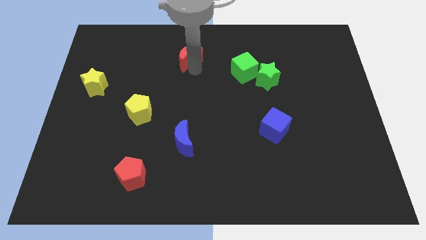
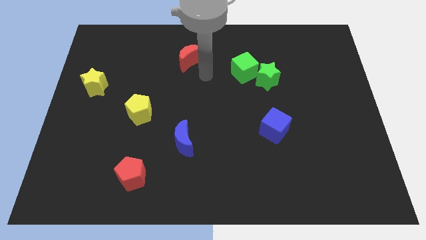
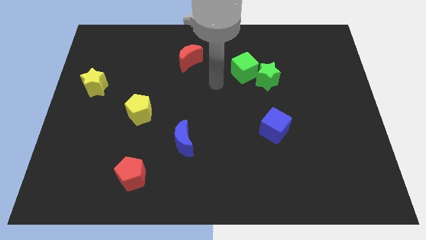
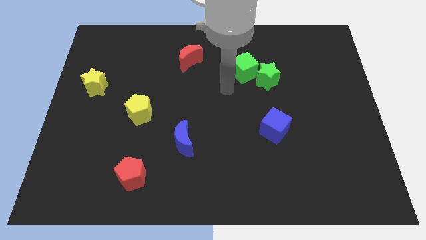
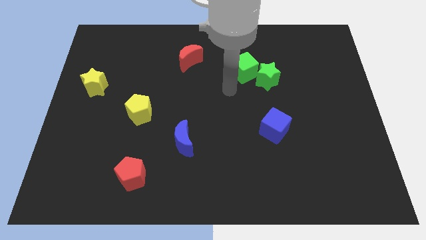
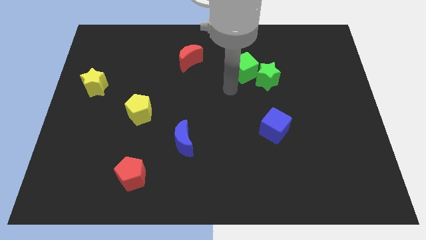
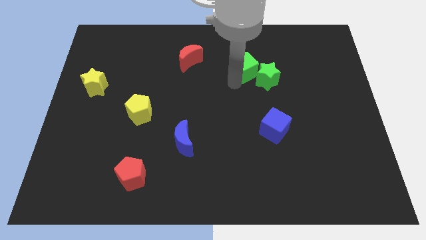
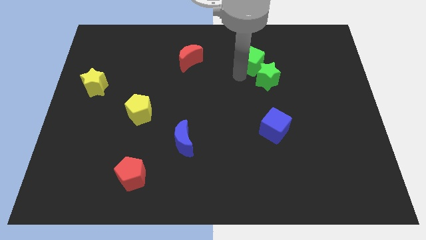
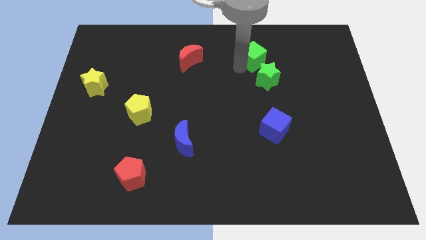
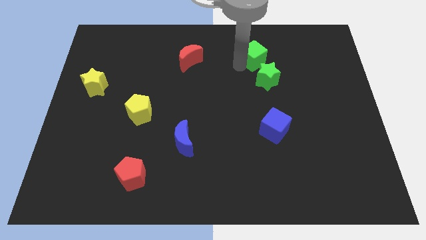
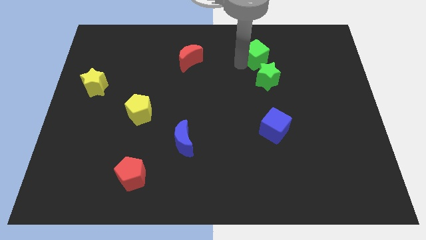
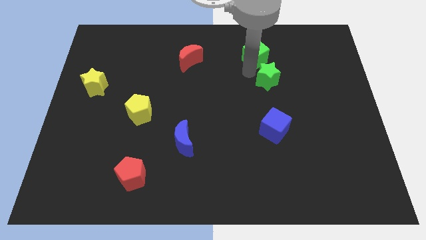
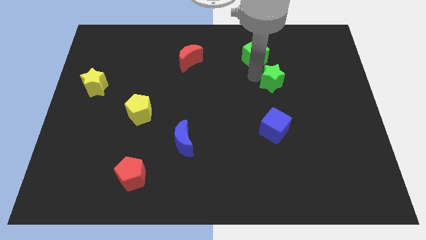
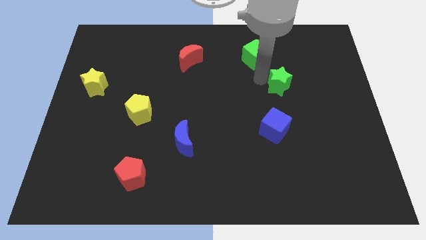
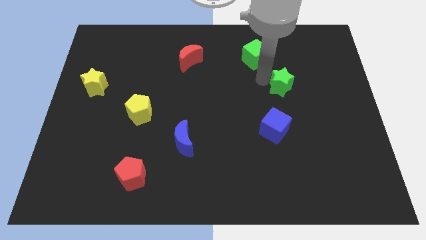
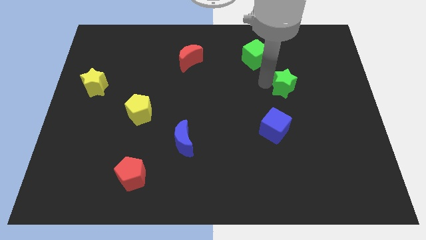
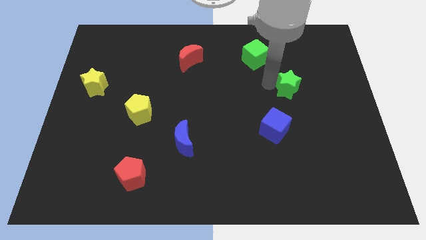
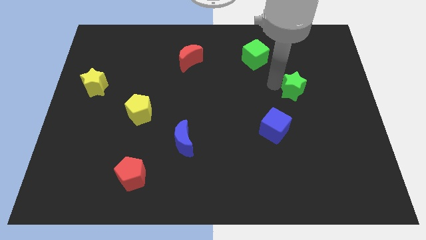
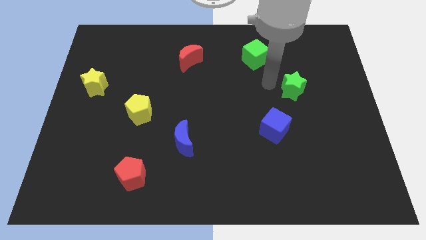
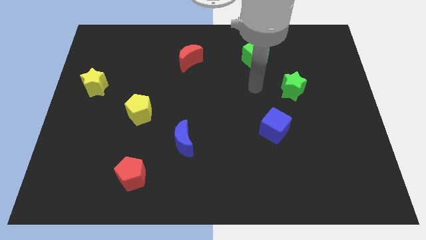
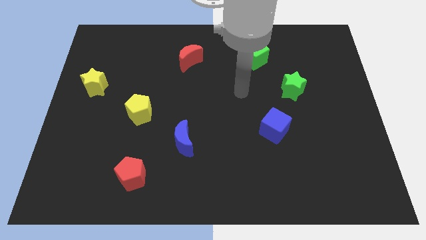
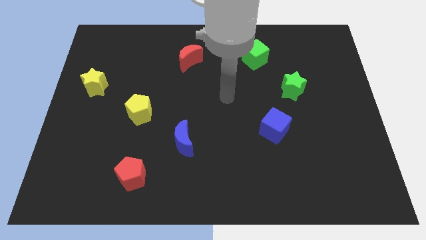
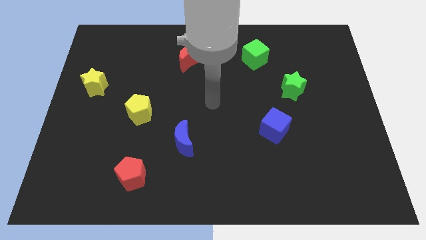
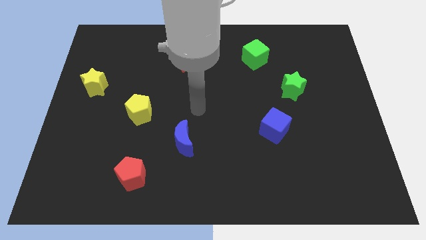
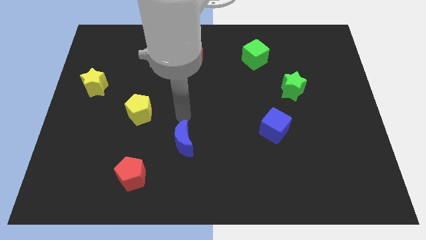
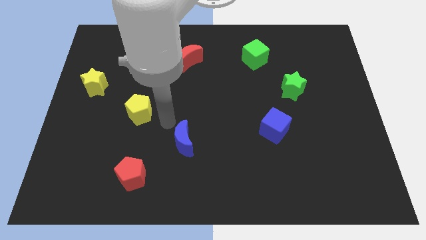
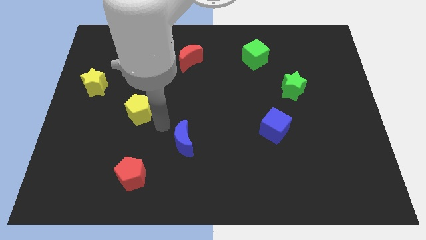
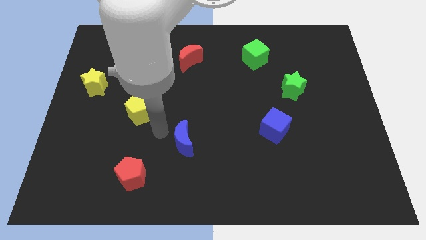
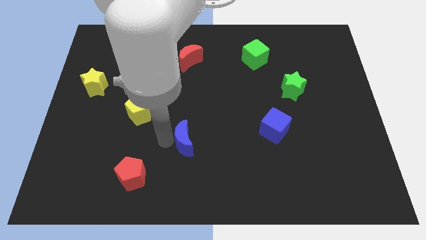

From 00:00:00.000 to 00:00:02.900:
separate the green star from the green cube

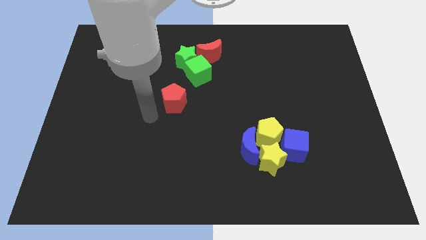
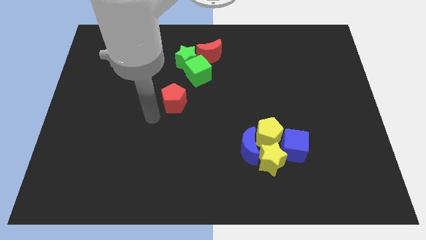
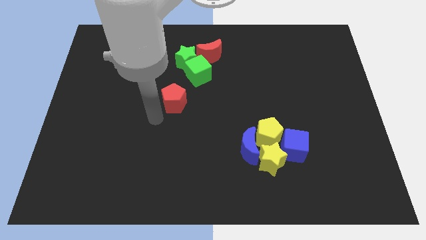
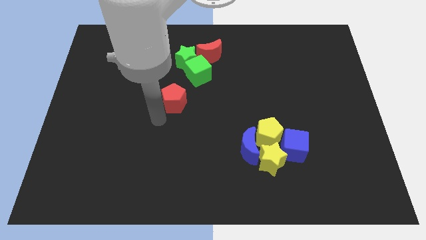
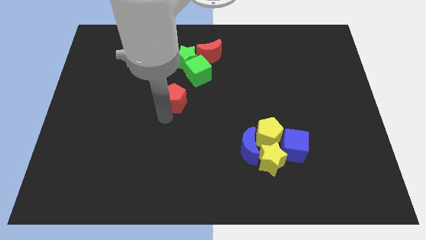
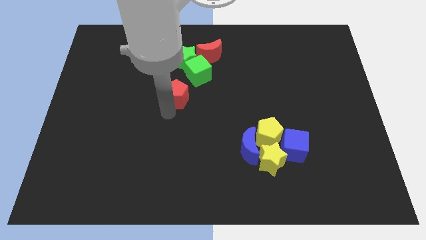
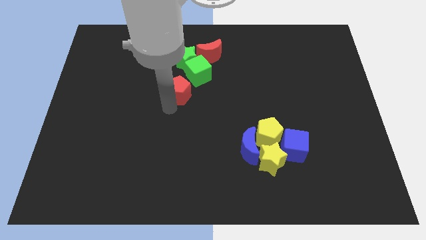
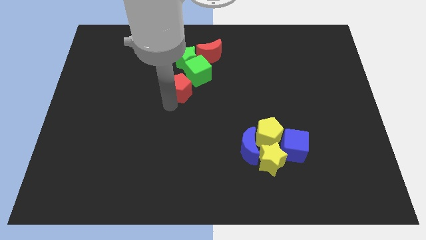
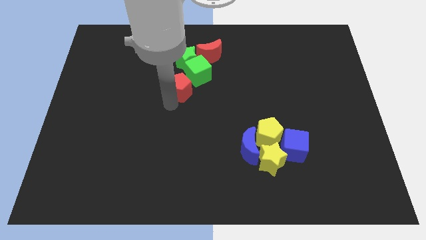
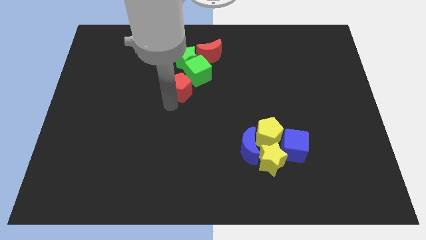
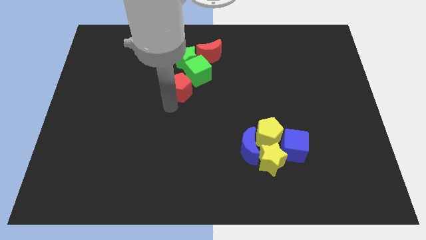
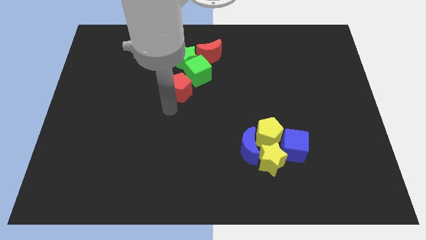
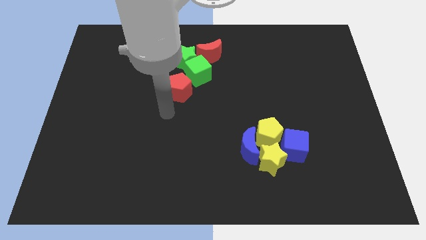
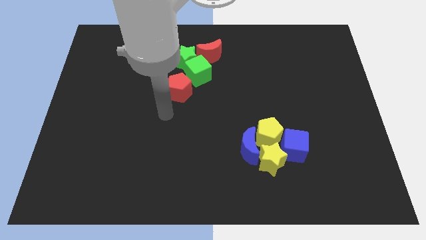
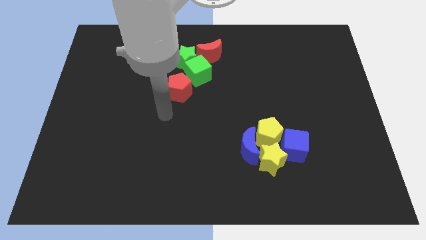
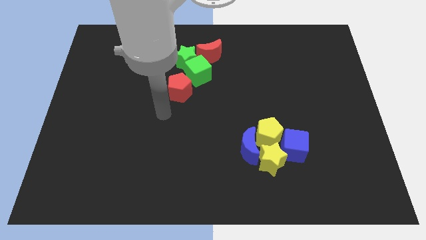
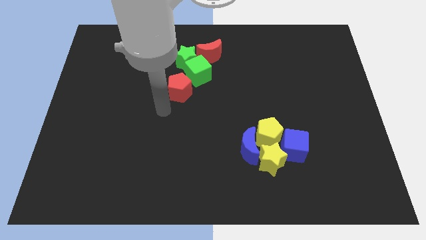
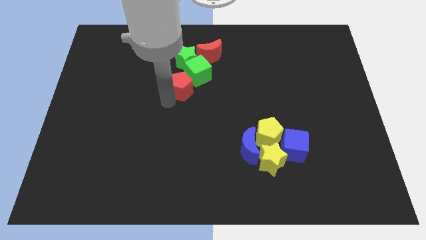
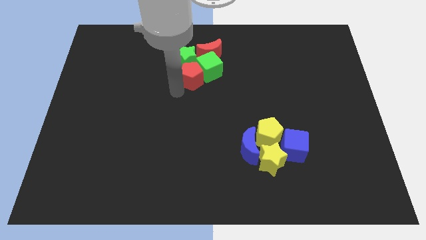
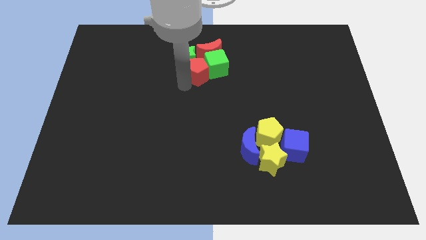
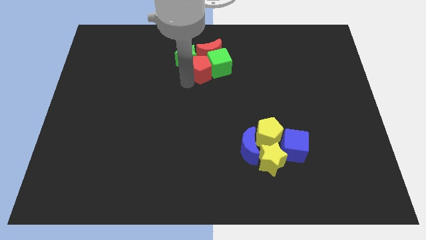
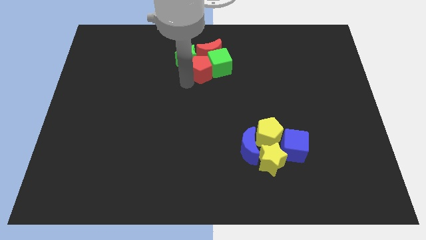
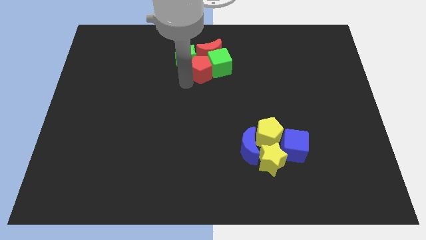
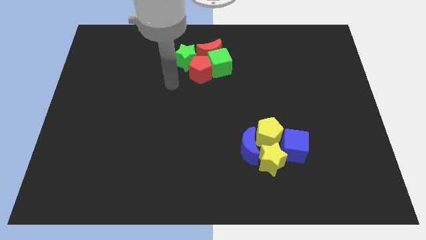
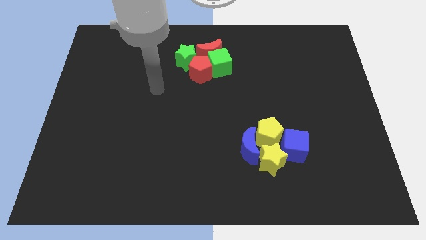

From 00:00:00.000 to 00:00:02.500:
push the red pentagon into group of blocks at the top side

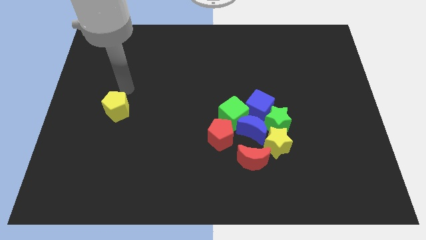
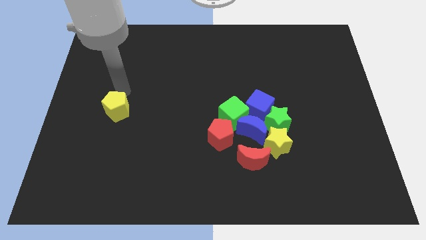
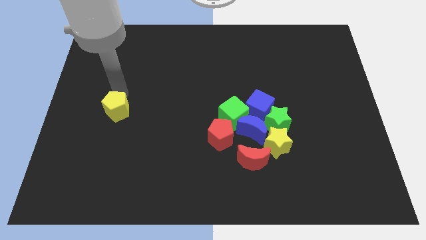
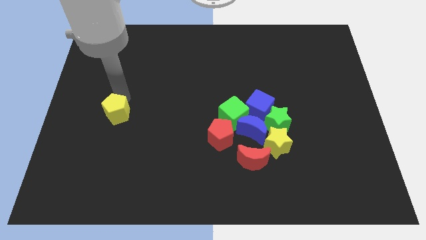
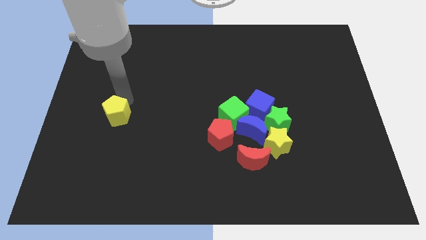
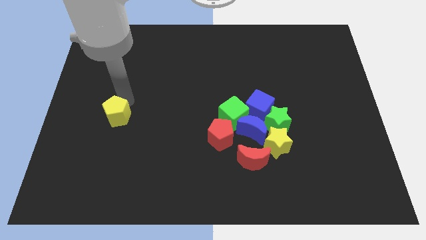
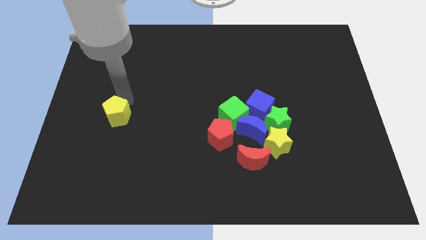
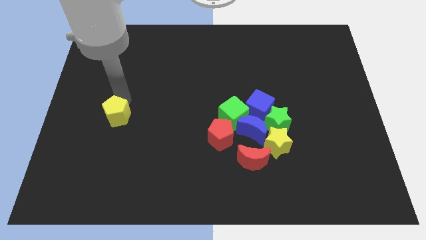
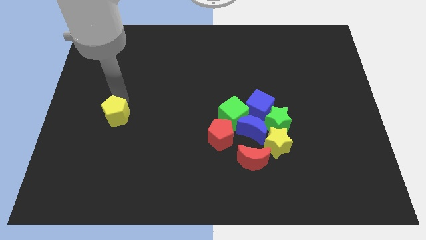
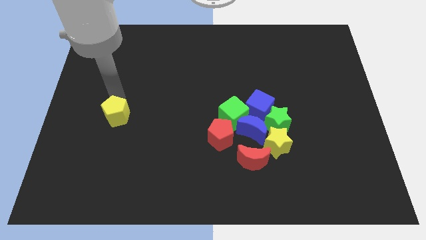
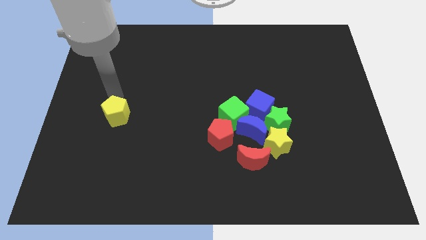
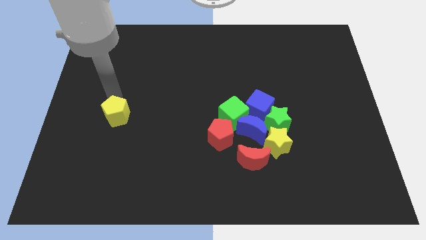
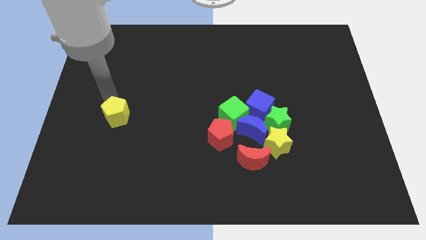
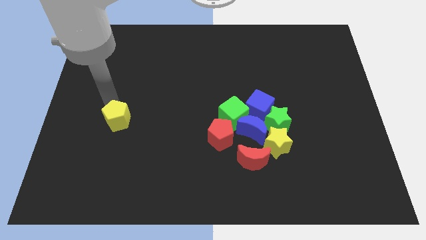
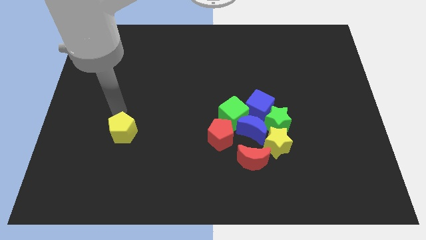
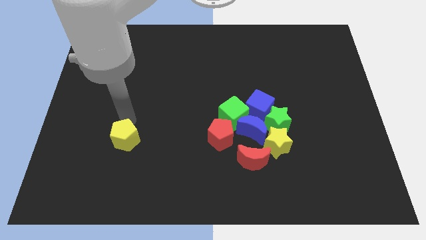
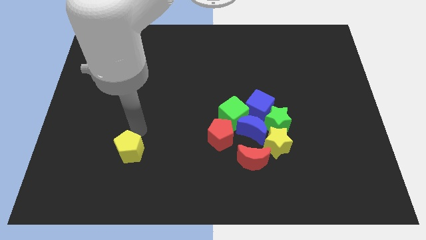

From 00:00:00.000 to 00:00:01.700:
push the yellow pentagon to the bottom of the board

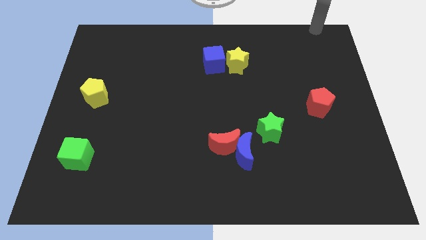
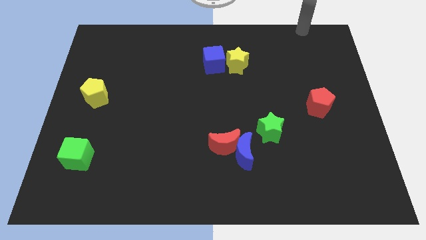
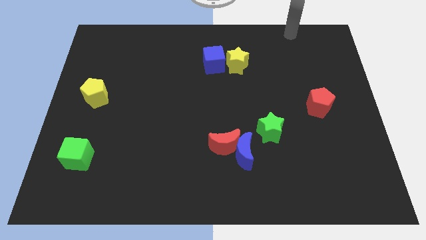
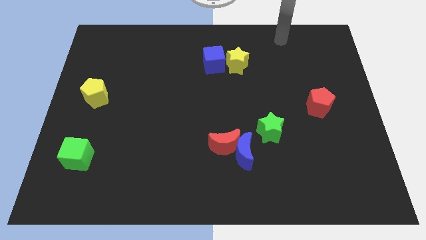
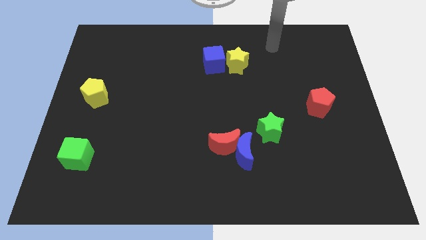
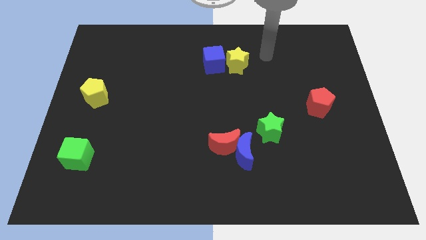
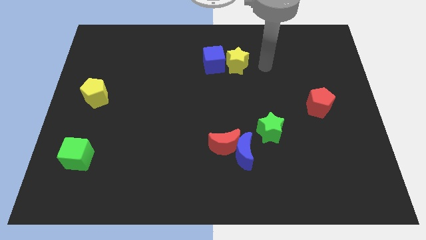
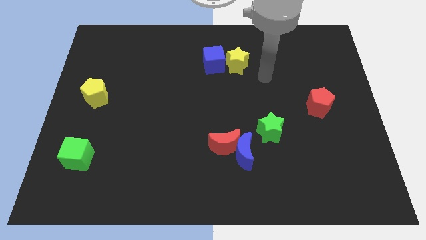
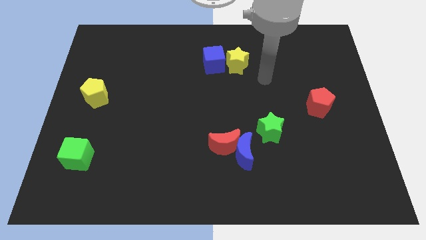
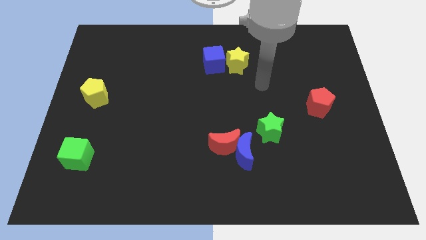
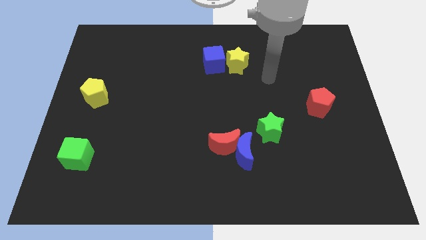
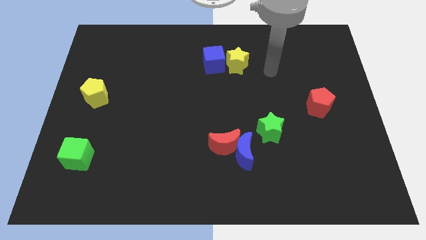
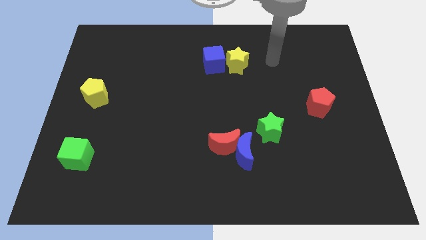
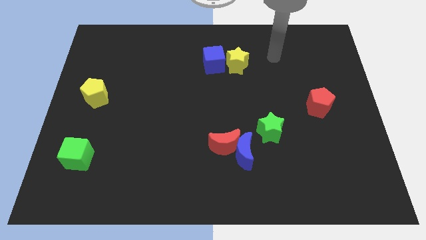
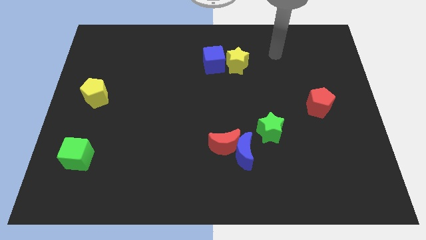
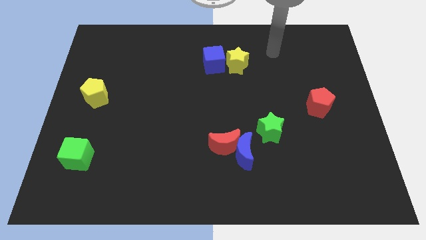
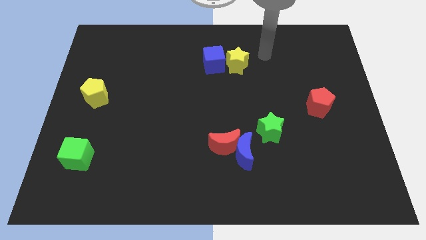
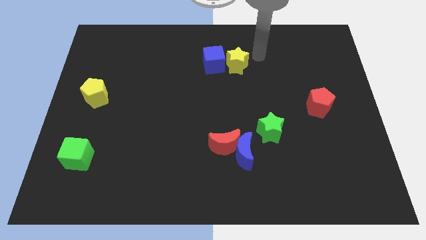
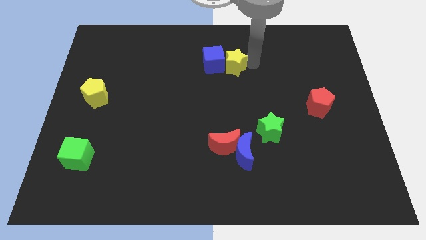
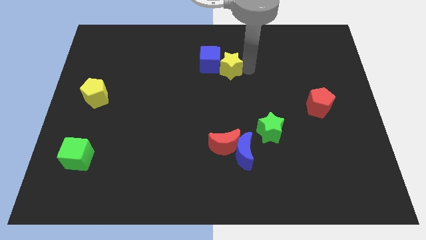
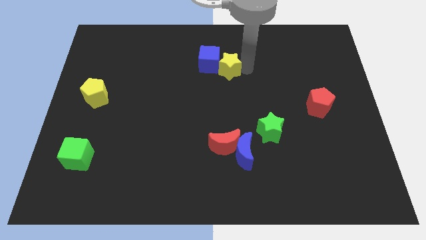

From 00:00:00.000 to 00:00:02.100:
move yellow star into blue cube
